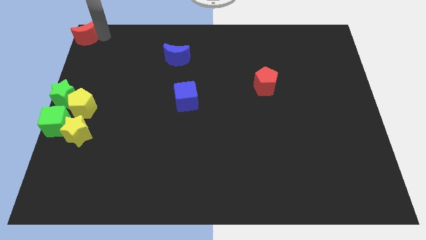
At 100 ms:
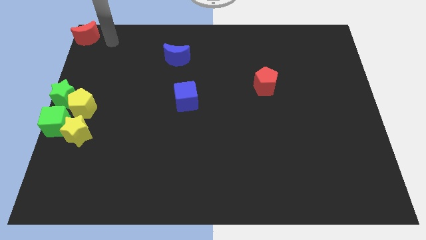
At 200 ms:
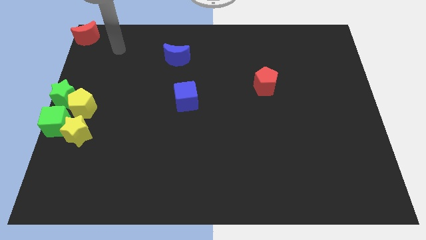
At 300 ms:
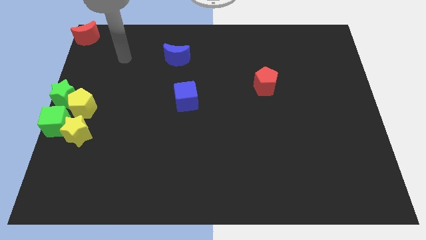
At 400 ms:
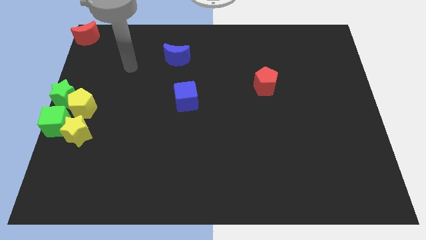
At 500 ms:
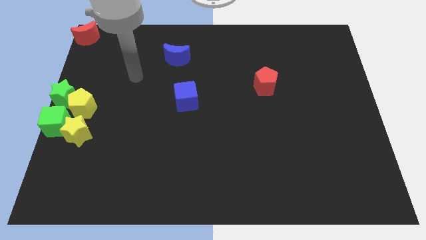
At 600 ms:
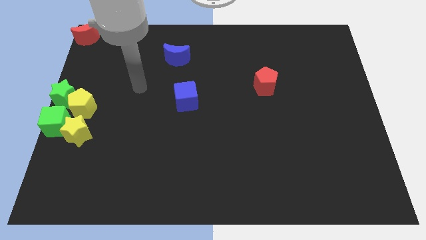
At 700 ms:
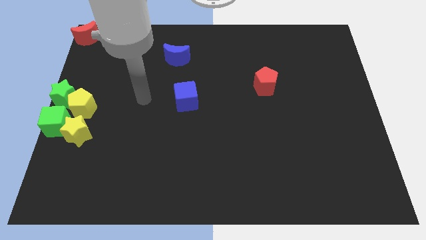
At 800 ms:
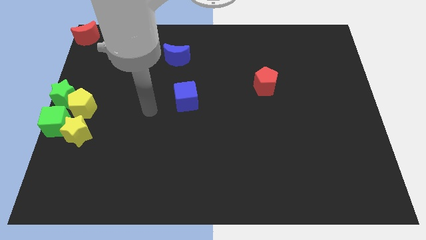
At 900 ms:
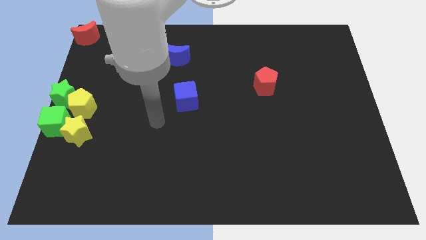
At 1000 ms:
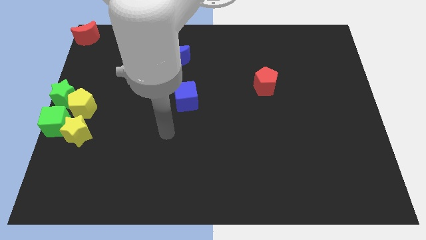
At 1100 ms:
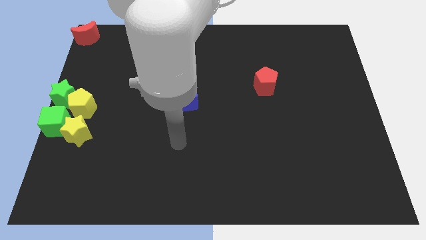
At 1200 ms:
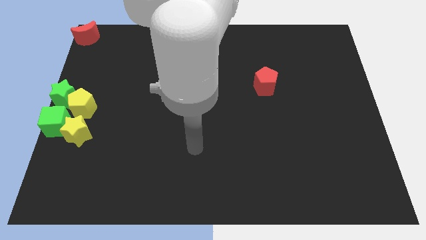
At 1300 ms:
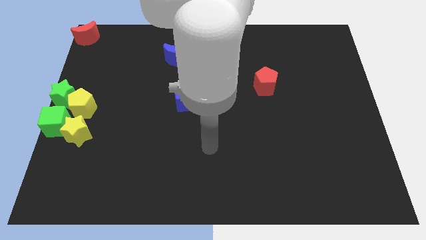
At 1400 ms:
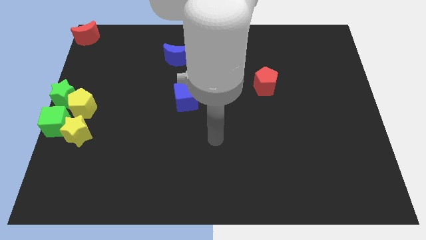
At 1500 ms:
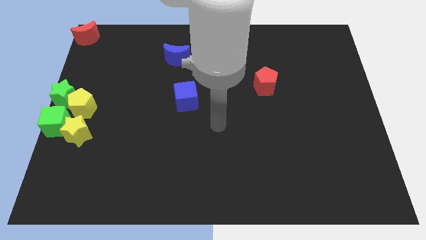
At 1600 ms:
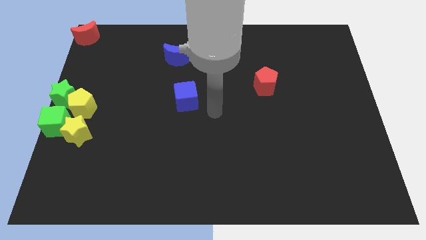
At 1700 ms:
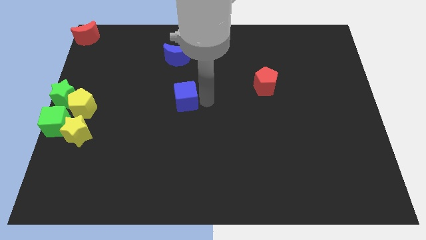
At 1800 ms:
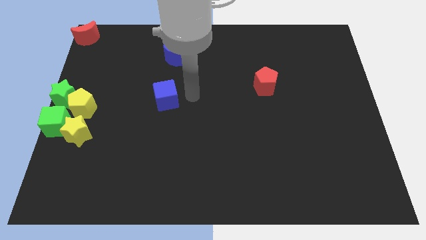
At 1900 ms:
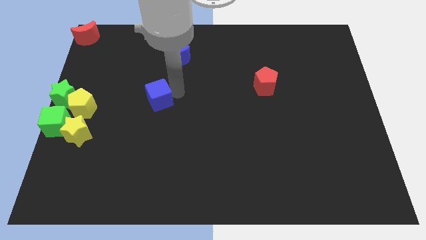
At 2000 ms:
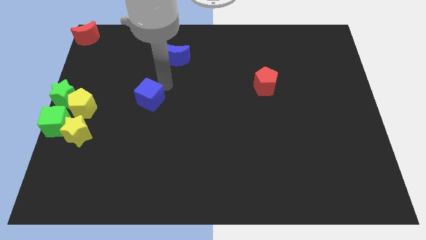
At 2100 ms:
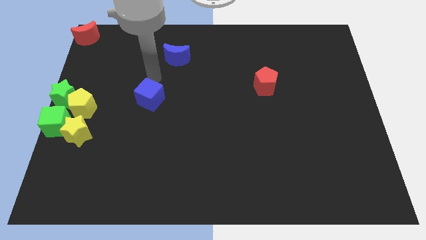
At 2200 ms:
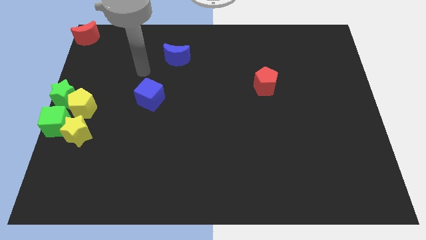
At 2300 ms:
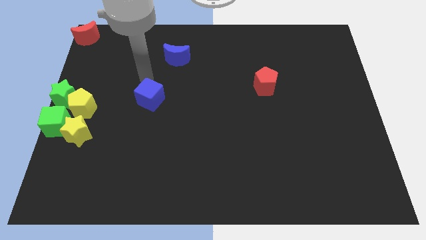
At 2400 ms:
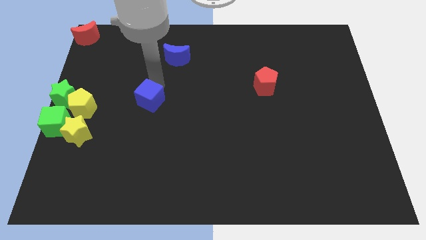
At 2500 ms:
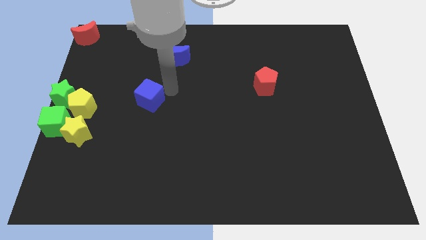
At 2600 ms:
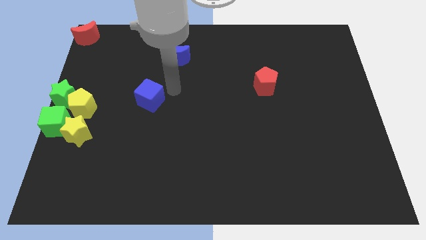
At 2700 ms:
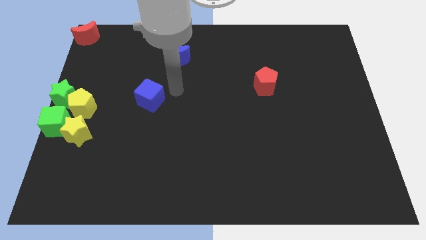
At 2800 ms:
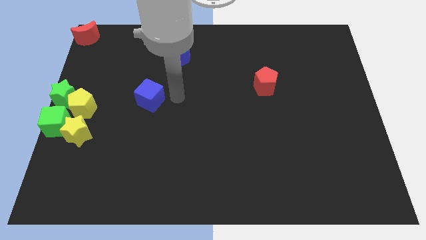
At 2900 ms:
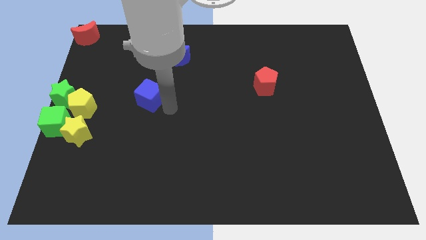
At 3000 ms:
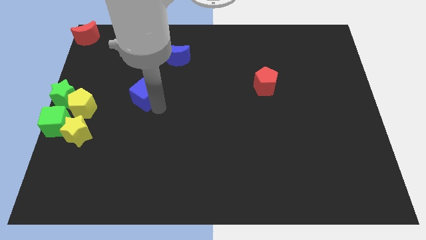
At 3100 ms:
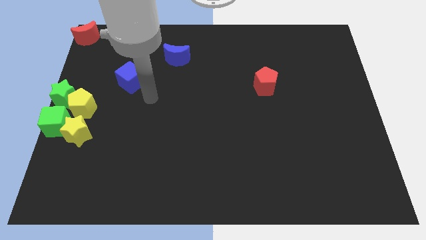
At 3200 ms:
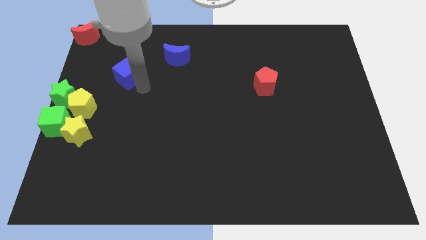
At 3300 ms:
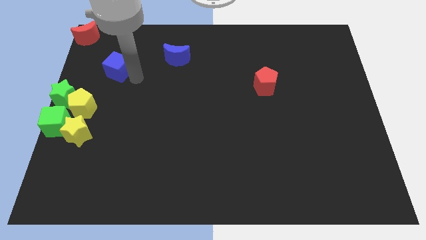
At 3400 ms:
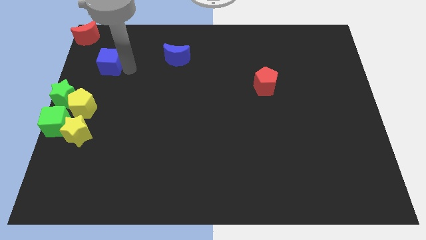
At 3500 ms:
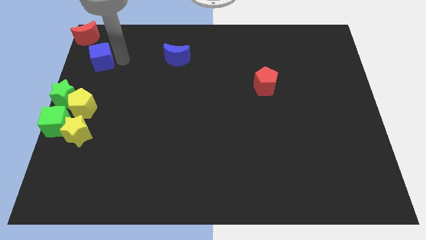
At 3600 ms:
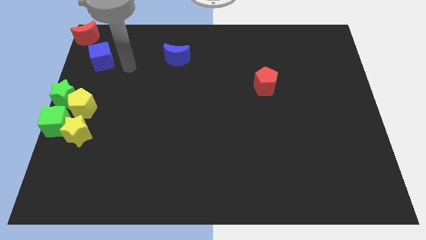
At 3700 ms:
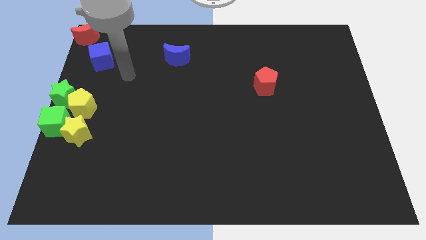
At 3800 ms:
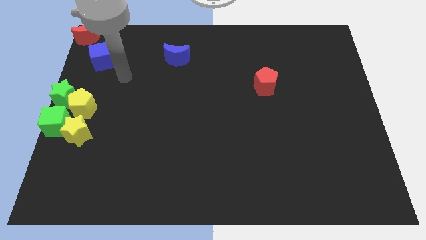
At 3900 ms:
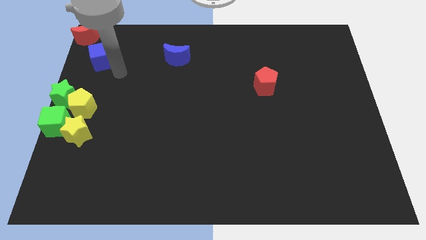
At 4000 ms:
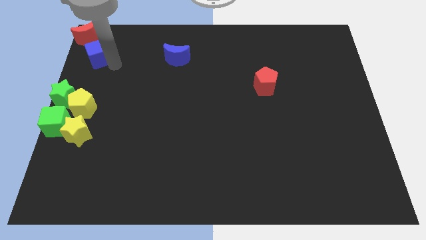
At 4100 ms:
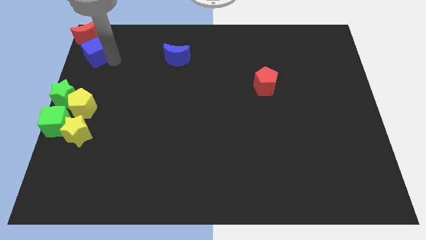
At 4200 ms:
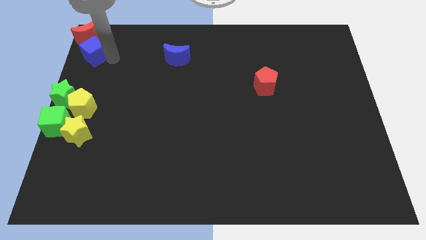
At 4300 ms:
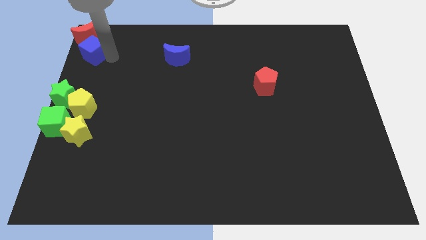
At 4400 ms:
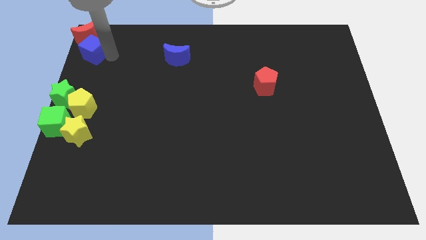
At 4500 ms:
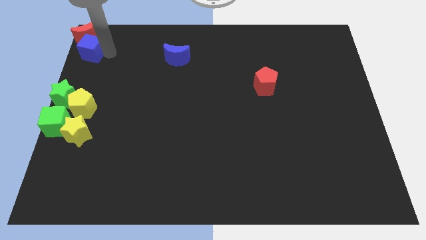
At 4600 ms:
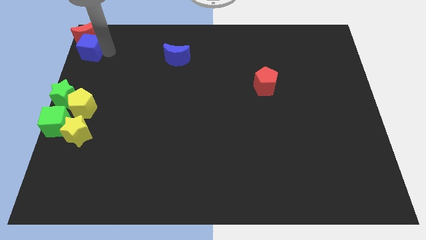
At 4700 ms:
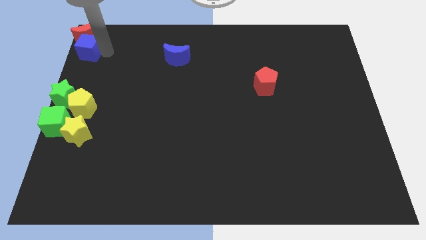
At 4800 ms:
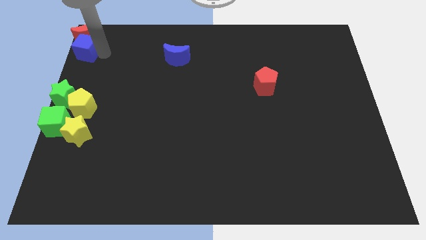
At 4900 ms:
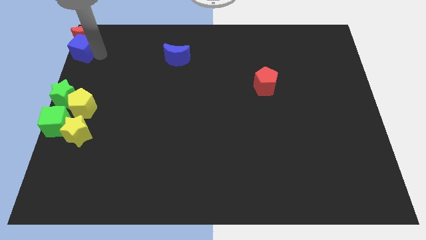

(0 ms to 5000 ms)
push the blue cube to the bottom of the red crescent

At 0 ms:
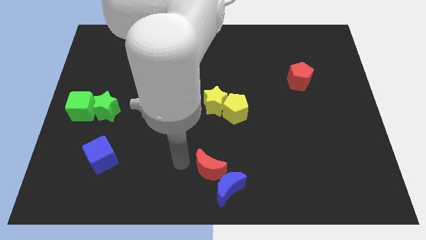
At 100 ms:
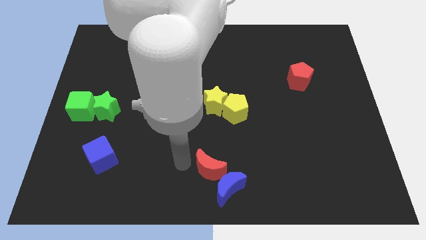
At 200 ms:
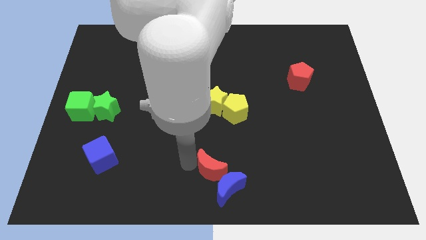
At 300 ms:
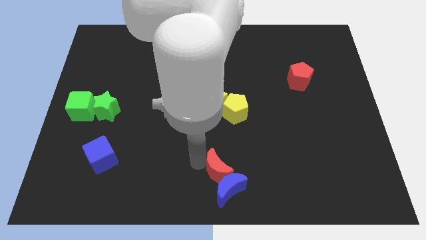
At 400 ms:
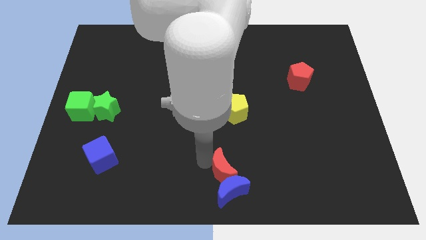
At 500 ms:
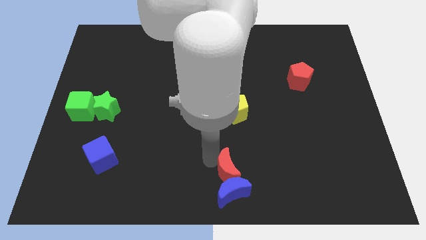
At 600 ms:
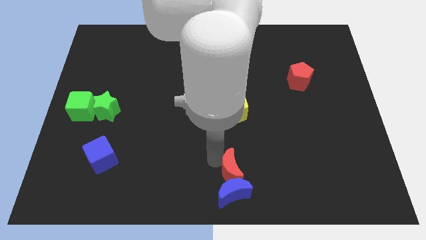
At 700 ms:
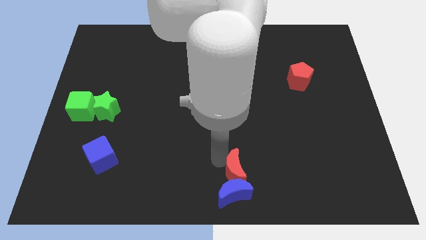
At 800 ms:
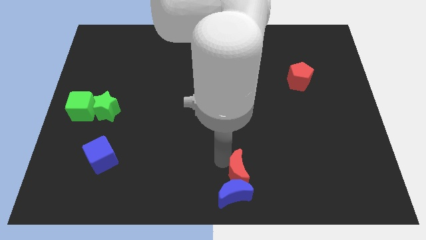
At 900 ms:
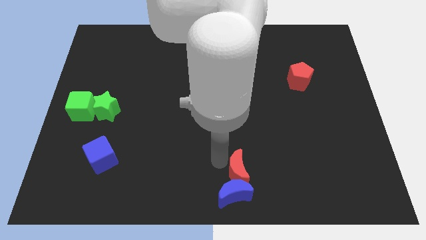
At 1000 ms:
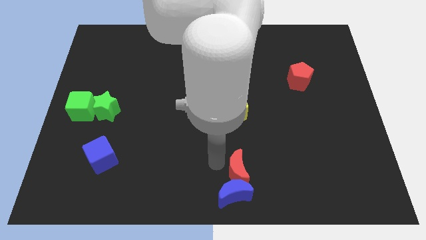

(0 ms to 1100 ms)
place the red crescent above the blue crescent

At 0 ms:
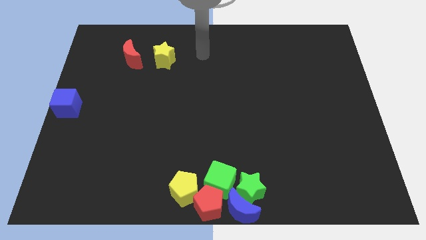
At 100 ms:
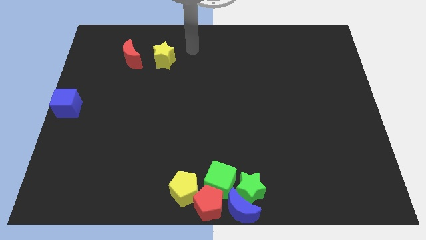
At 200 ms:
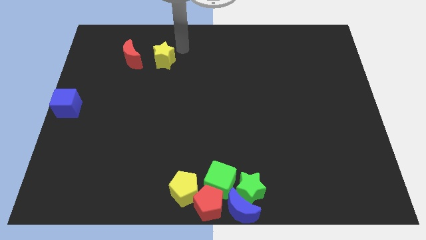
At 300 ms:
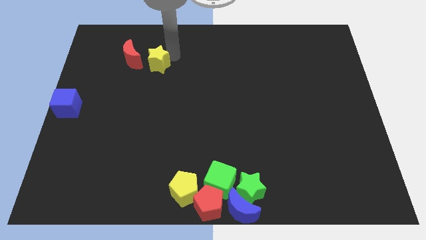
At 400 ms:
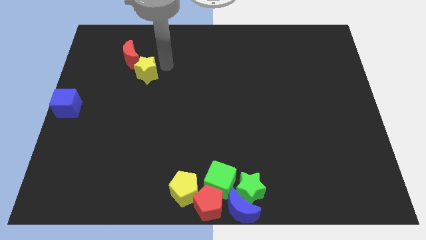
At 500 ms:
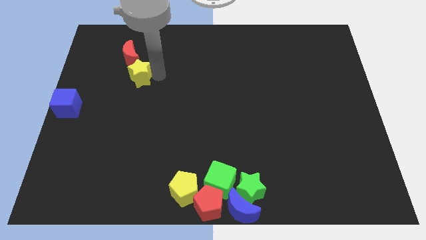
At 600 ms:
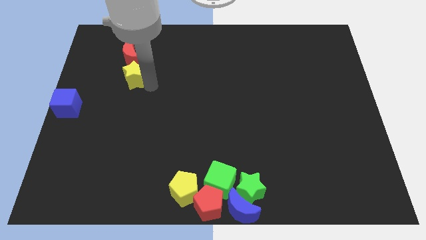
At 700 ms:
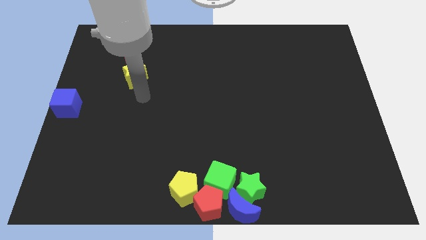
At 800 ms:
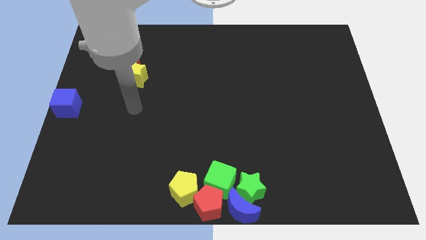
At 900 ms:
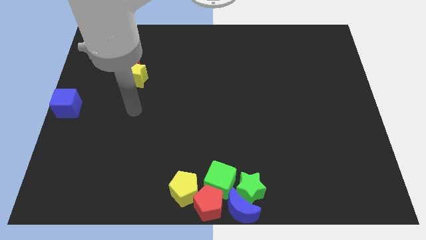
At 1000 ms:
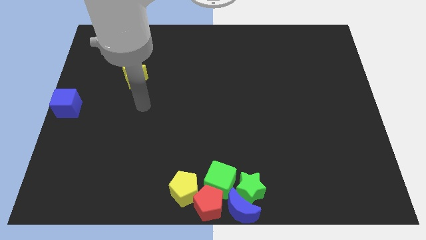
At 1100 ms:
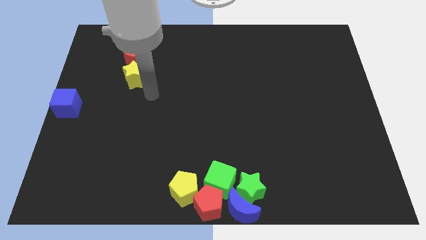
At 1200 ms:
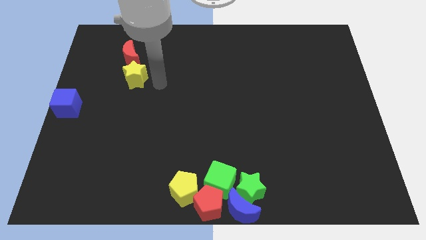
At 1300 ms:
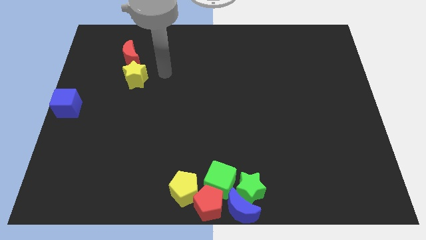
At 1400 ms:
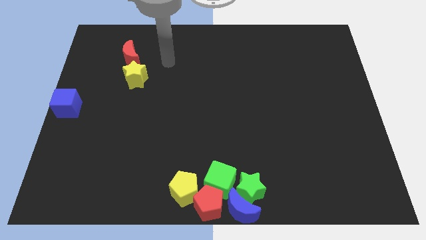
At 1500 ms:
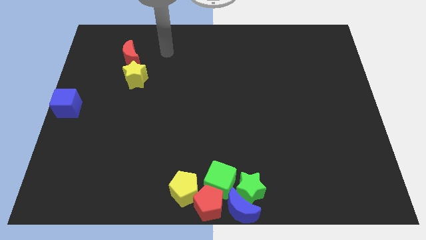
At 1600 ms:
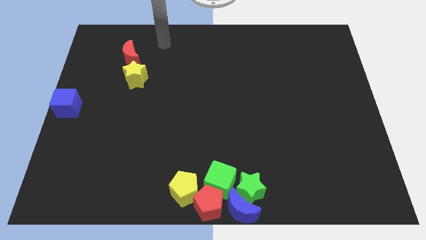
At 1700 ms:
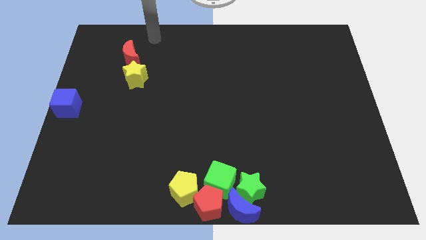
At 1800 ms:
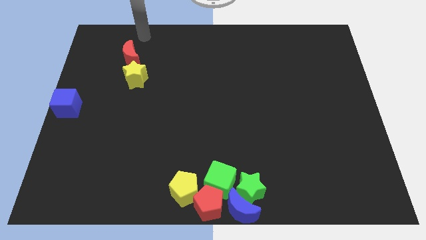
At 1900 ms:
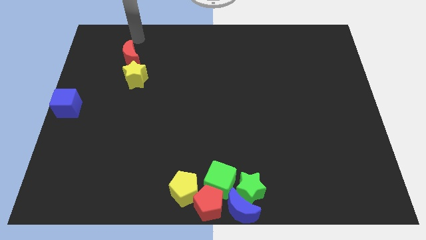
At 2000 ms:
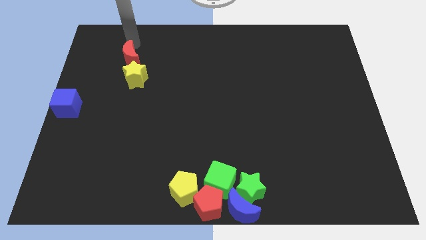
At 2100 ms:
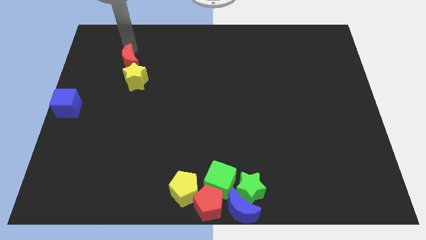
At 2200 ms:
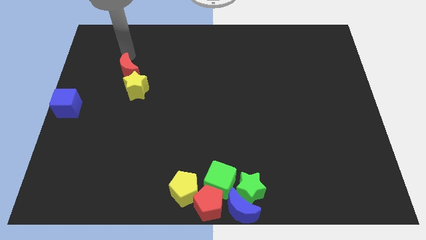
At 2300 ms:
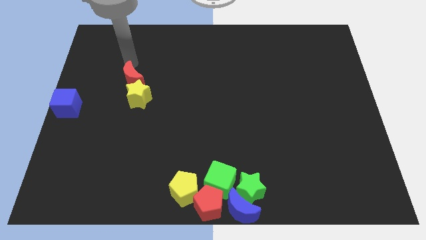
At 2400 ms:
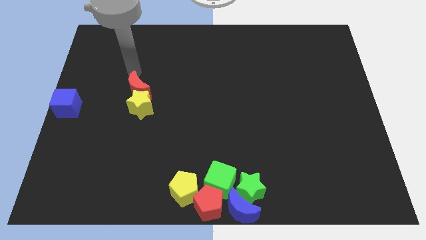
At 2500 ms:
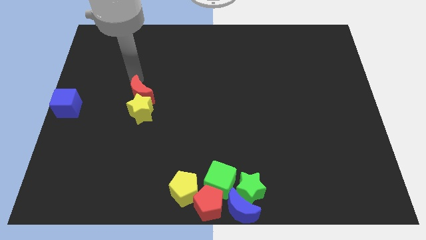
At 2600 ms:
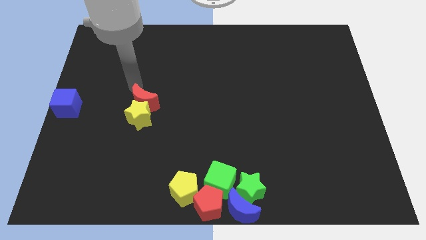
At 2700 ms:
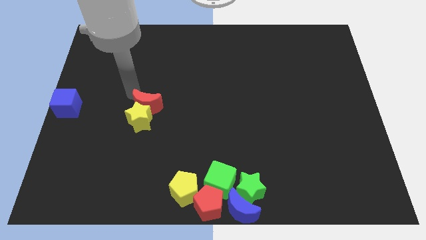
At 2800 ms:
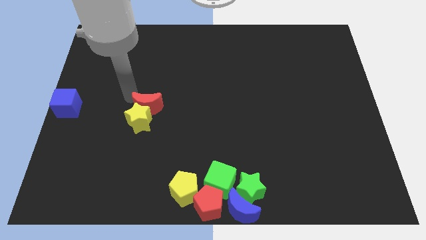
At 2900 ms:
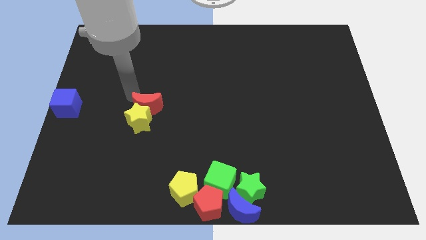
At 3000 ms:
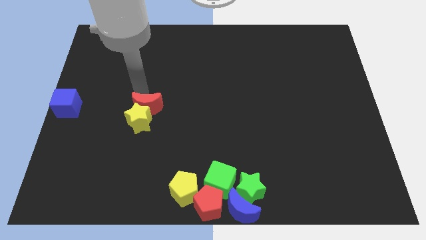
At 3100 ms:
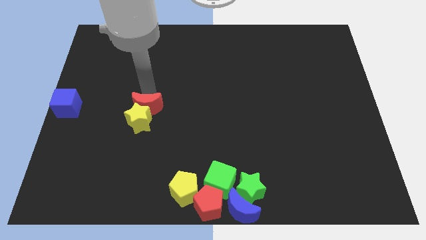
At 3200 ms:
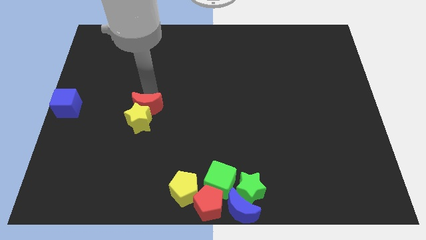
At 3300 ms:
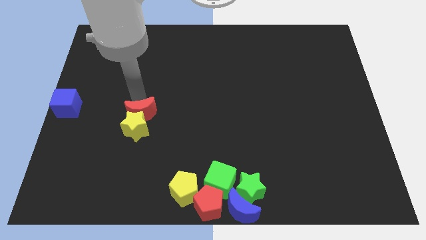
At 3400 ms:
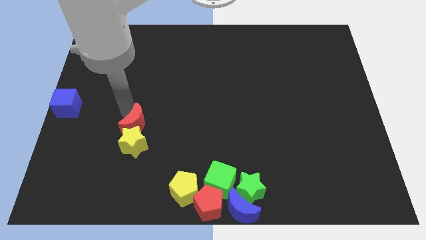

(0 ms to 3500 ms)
slightly drag the red crescent and yellow star towards bottom
